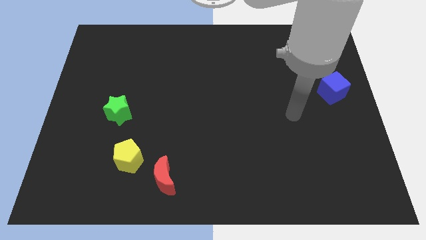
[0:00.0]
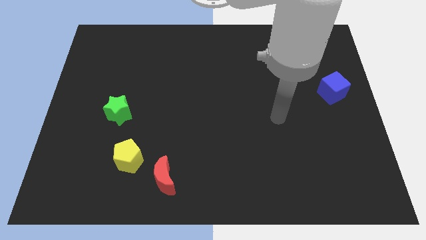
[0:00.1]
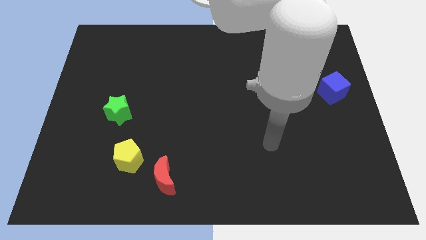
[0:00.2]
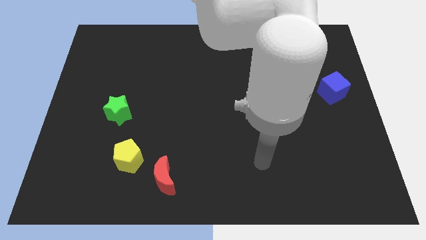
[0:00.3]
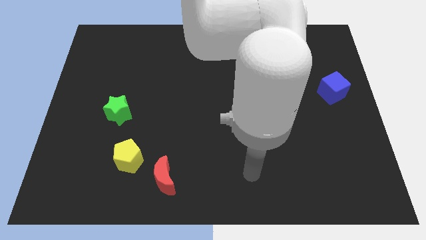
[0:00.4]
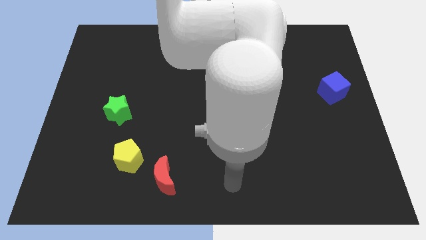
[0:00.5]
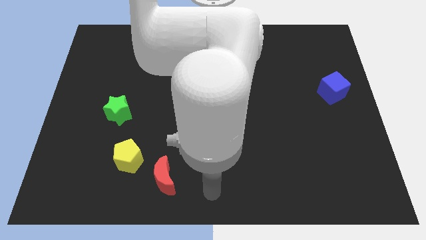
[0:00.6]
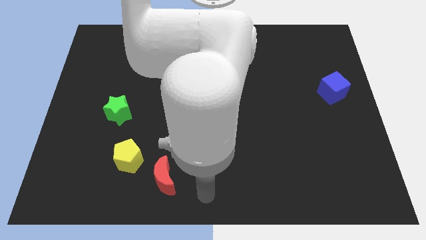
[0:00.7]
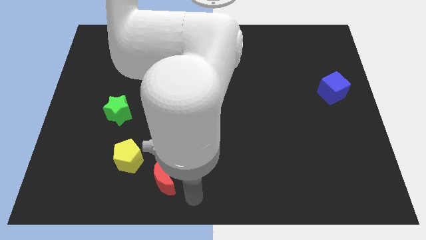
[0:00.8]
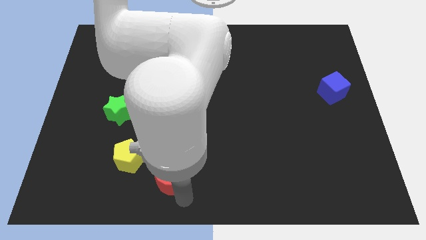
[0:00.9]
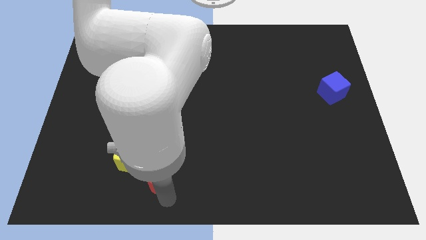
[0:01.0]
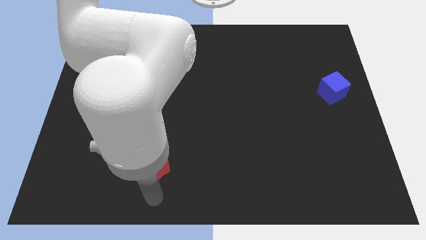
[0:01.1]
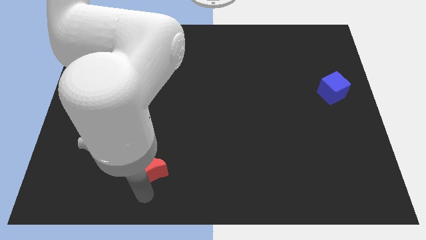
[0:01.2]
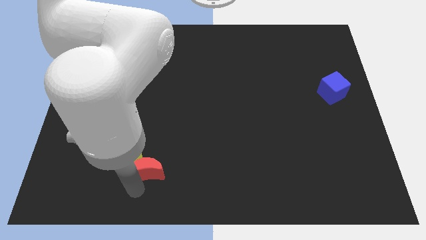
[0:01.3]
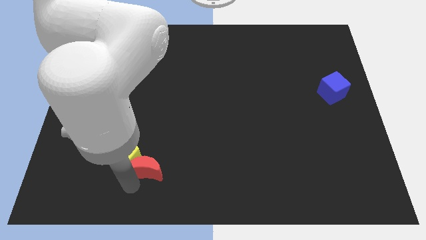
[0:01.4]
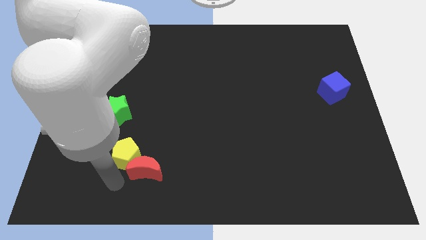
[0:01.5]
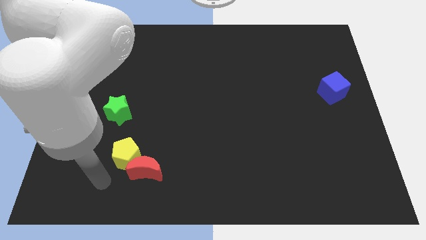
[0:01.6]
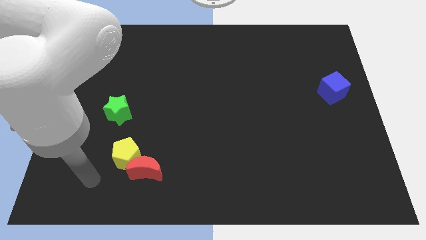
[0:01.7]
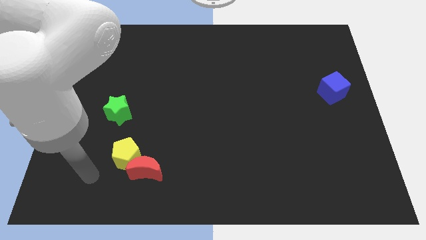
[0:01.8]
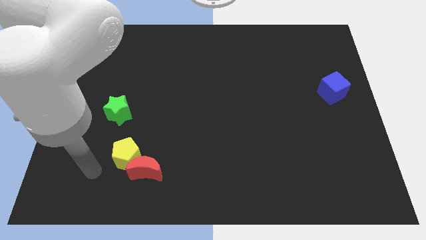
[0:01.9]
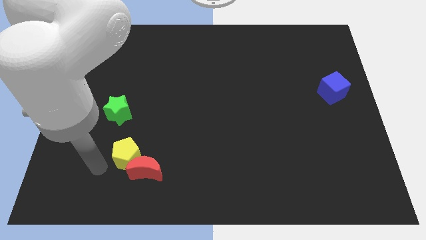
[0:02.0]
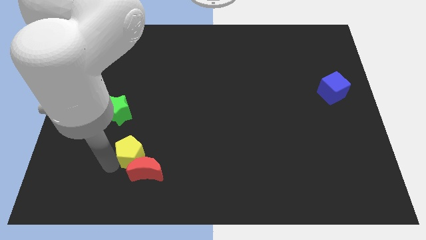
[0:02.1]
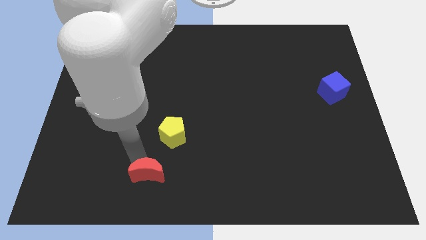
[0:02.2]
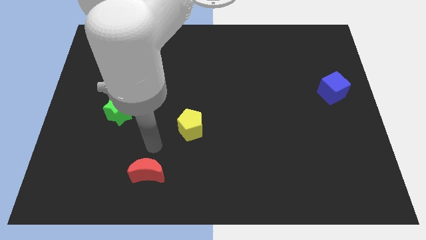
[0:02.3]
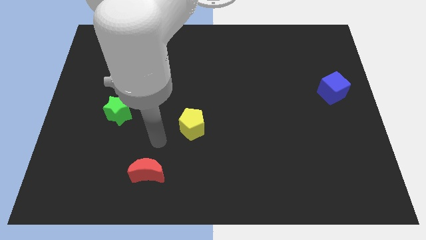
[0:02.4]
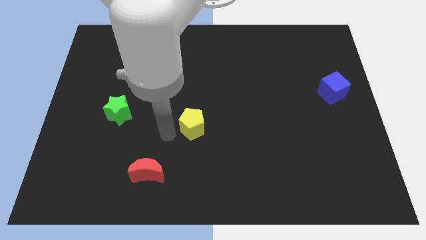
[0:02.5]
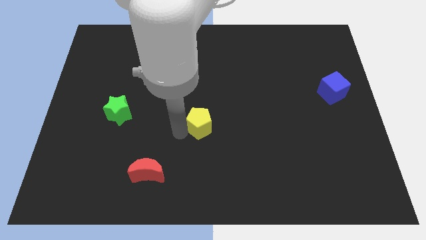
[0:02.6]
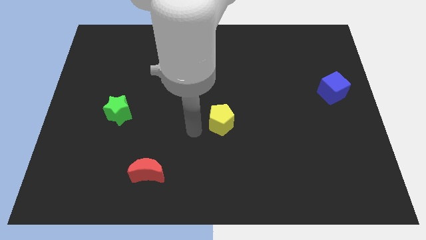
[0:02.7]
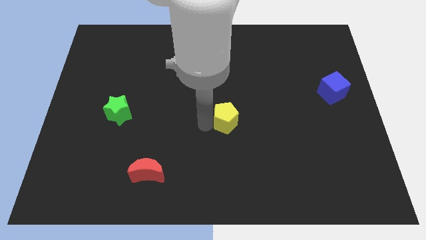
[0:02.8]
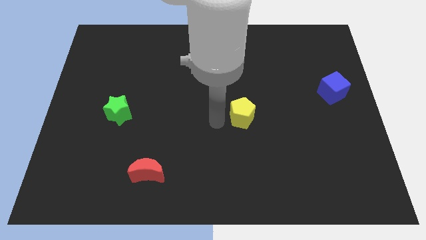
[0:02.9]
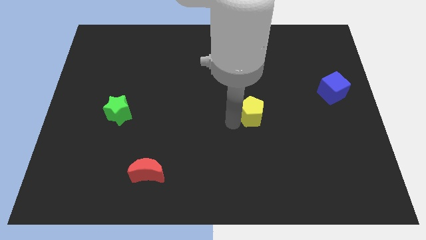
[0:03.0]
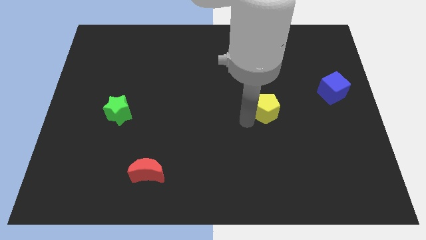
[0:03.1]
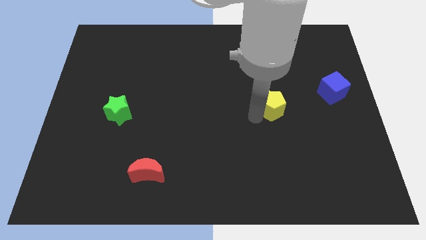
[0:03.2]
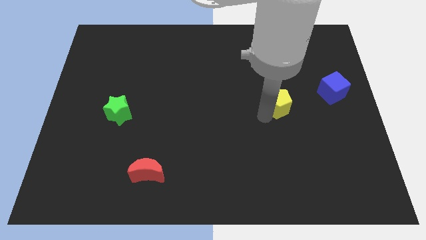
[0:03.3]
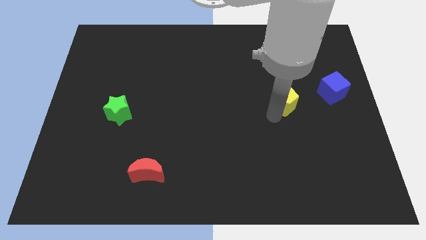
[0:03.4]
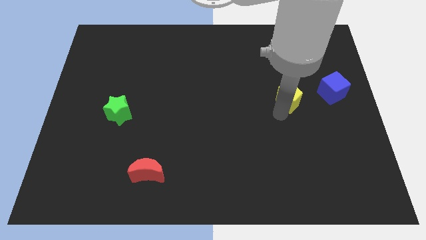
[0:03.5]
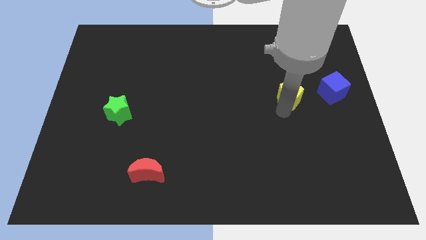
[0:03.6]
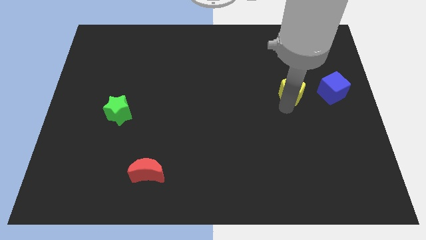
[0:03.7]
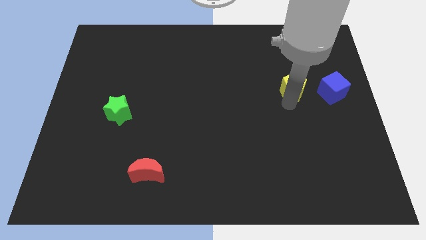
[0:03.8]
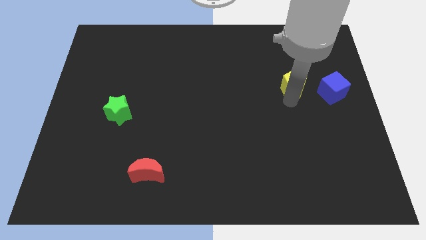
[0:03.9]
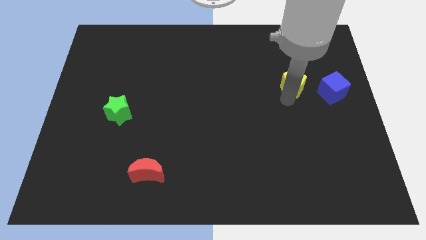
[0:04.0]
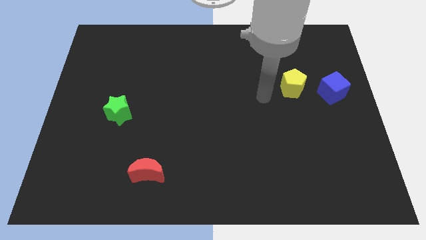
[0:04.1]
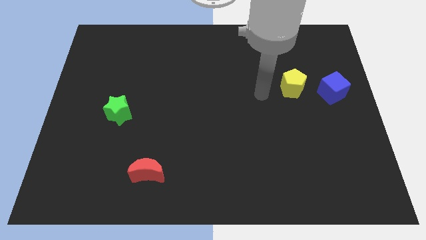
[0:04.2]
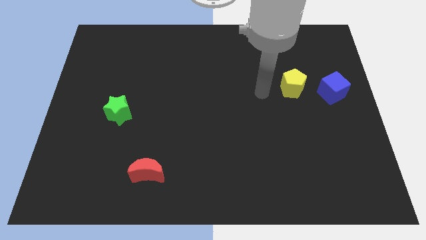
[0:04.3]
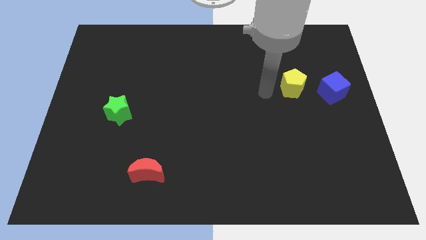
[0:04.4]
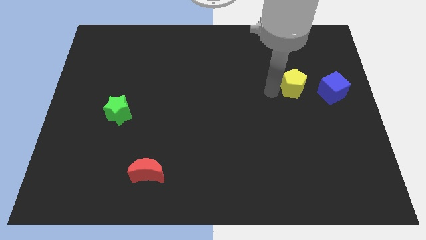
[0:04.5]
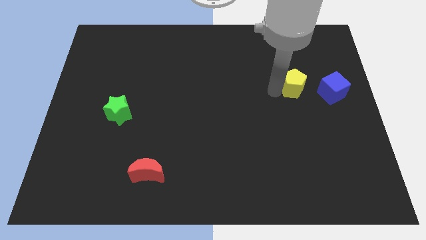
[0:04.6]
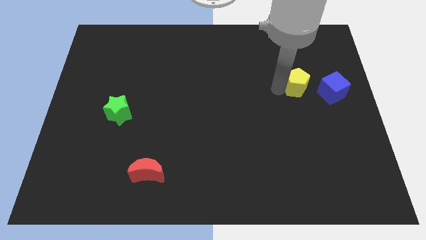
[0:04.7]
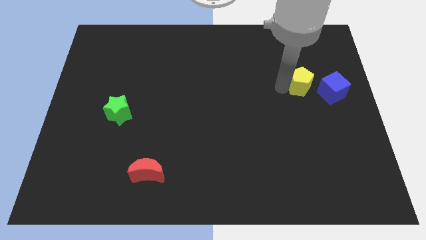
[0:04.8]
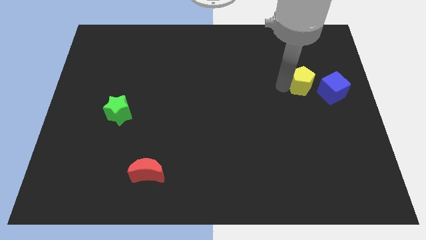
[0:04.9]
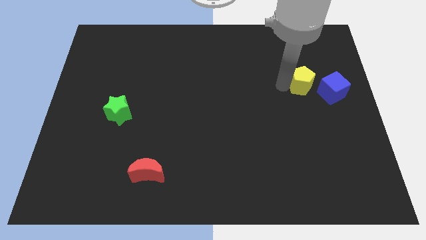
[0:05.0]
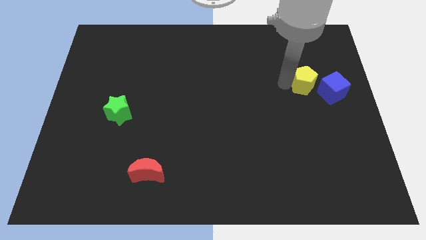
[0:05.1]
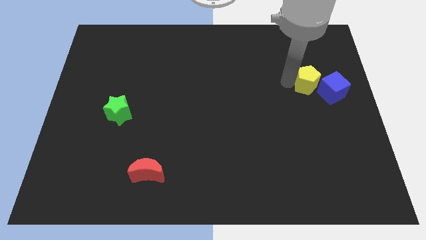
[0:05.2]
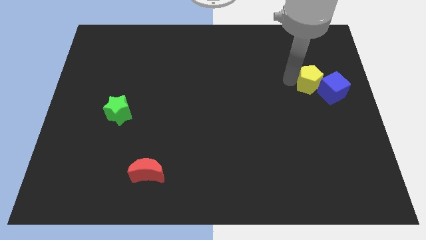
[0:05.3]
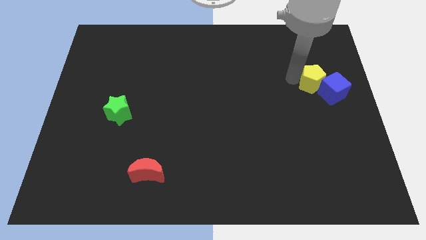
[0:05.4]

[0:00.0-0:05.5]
put the yellow block next to the blue block

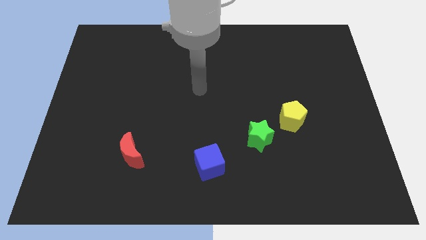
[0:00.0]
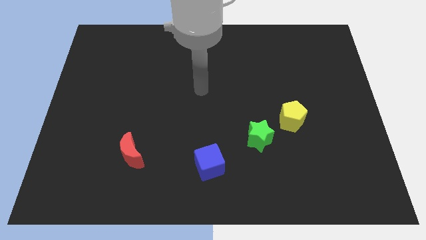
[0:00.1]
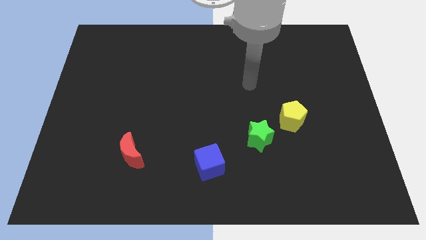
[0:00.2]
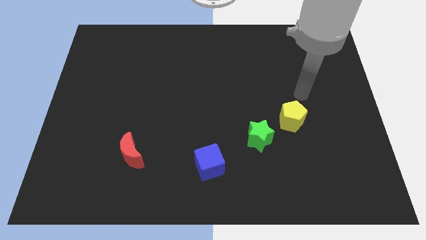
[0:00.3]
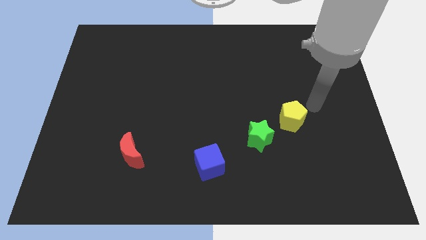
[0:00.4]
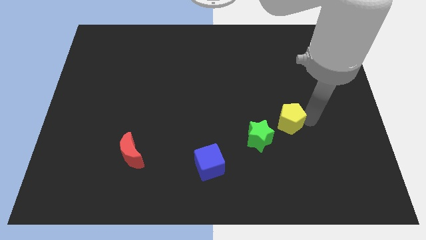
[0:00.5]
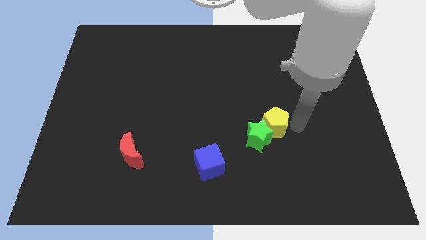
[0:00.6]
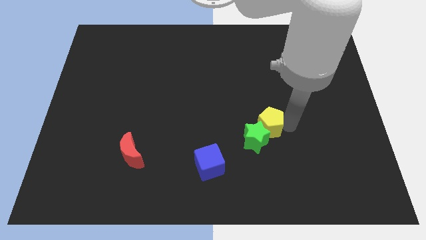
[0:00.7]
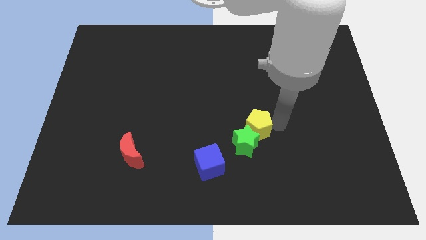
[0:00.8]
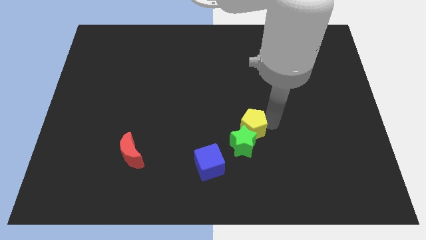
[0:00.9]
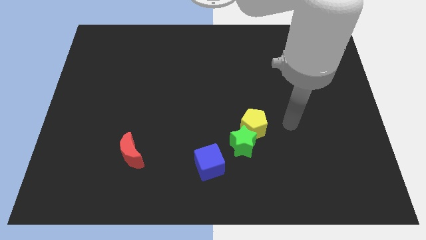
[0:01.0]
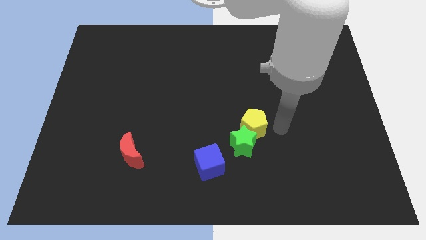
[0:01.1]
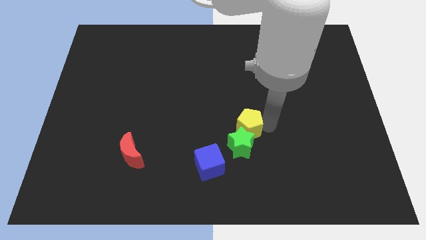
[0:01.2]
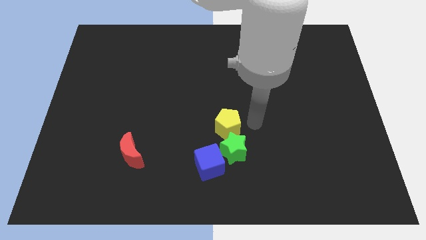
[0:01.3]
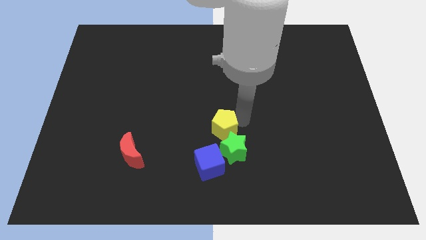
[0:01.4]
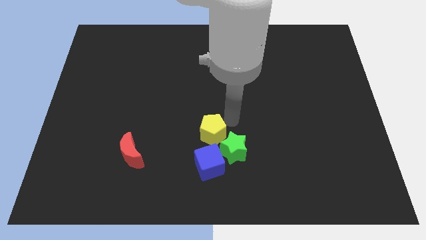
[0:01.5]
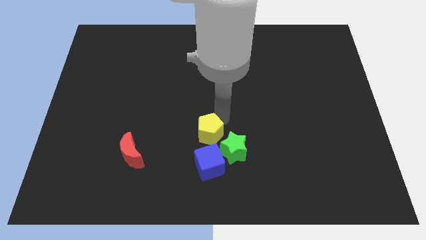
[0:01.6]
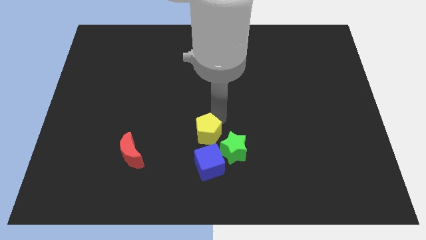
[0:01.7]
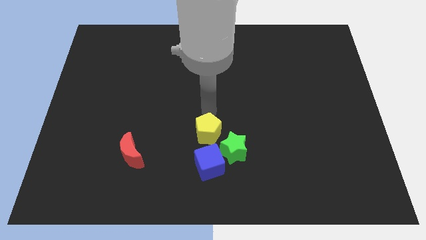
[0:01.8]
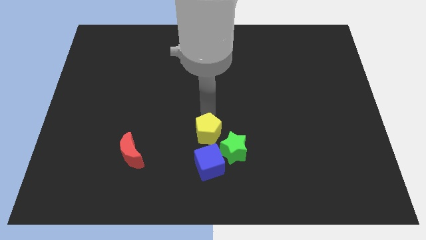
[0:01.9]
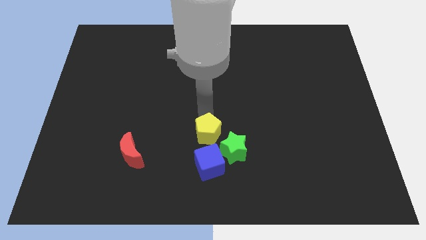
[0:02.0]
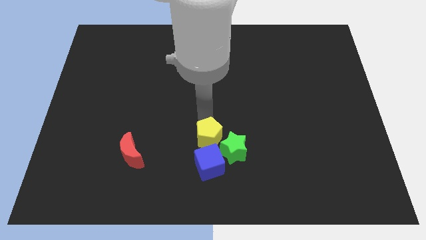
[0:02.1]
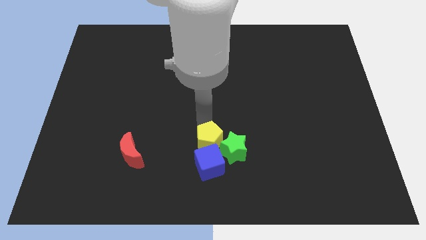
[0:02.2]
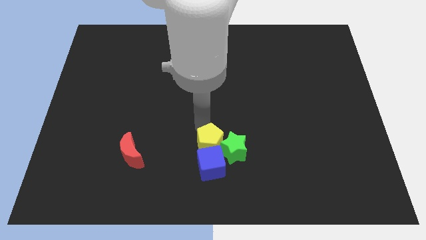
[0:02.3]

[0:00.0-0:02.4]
move the yellow block next to the blue block

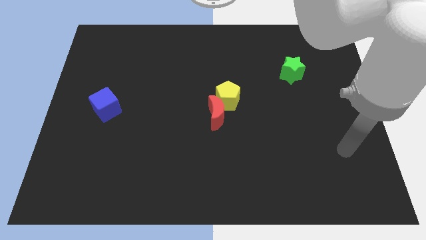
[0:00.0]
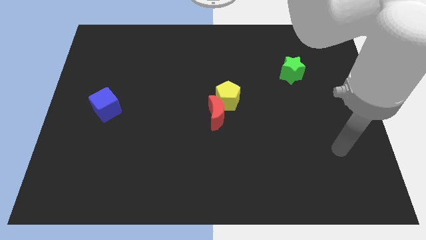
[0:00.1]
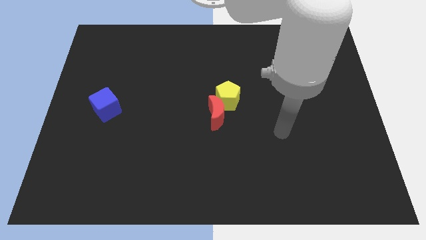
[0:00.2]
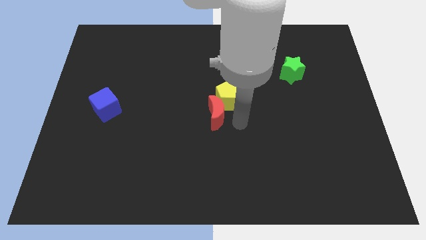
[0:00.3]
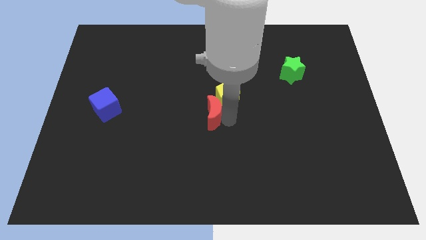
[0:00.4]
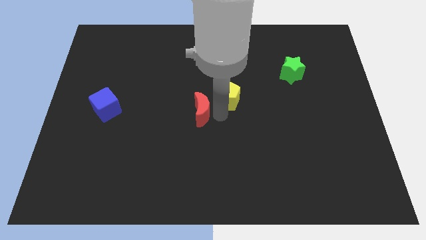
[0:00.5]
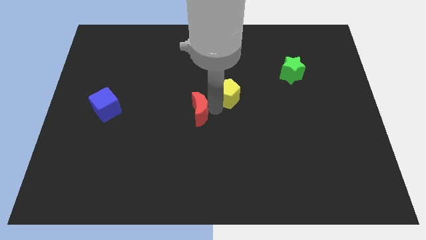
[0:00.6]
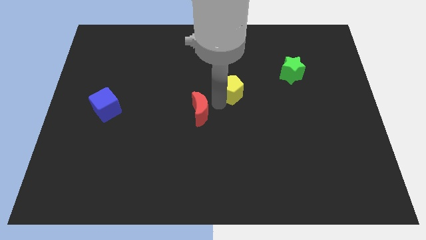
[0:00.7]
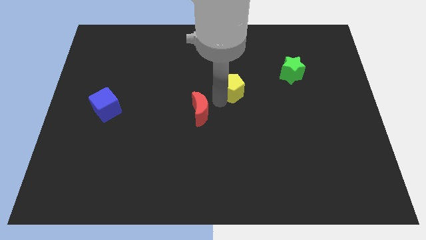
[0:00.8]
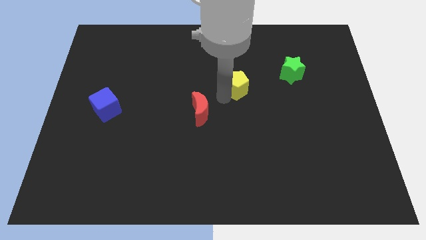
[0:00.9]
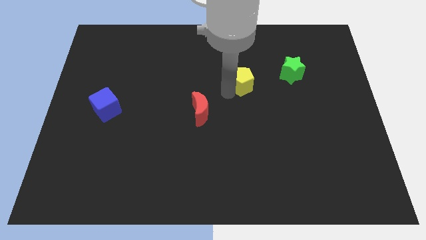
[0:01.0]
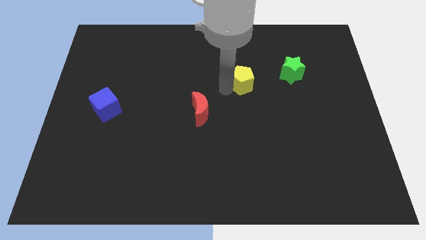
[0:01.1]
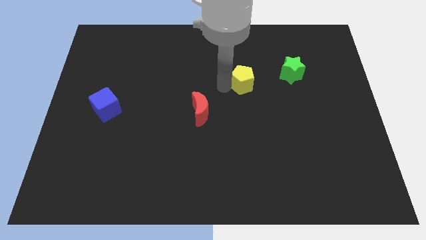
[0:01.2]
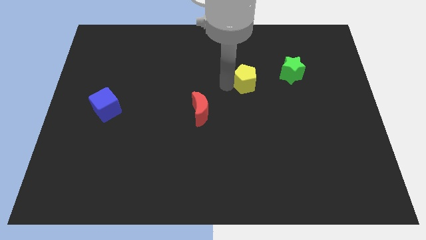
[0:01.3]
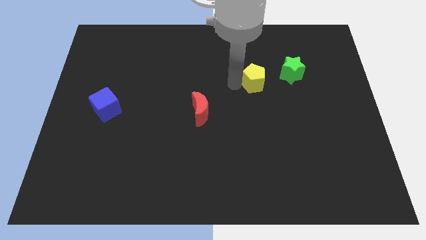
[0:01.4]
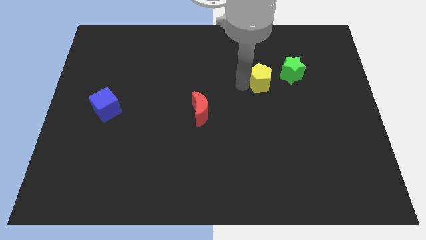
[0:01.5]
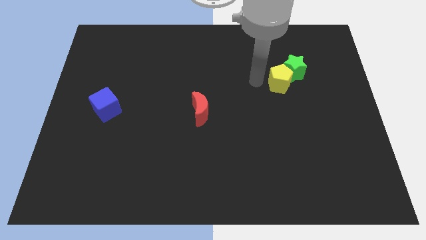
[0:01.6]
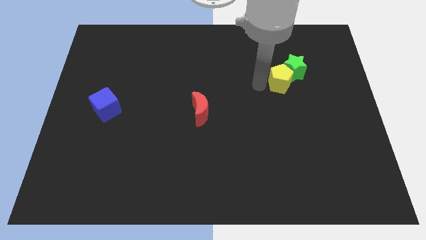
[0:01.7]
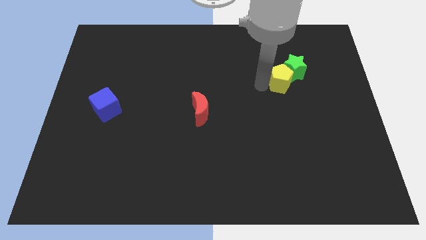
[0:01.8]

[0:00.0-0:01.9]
slide the yellow pentagon close to the star
